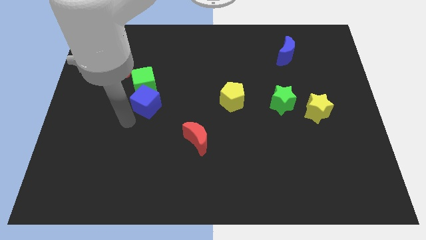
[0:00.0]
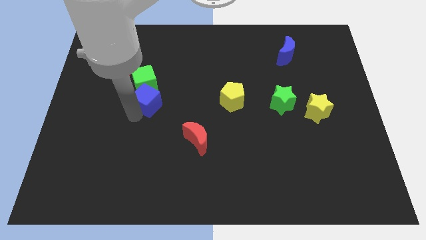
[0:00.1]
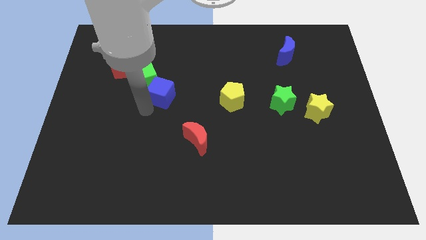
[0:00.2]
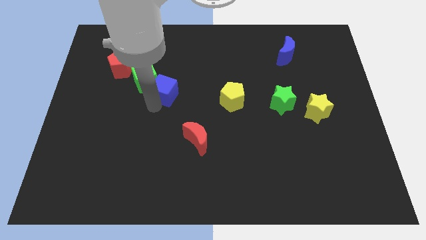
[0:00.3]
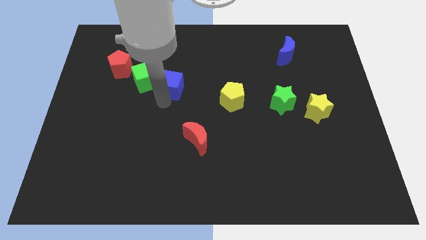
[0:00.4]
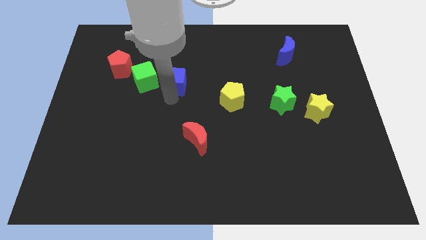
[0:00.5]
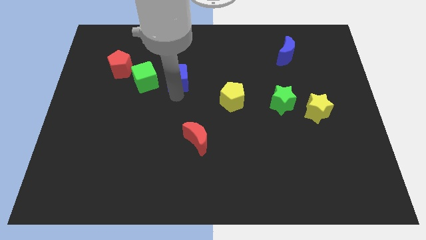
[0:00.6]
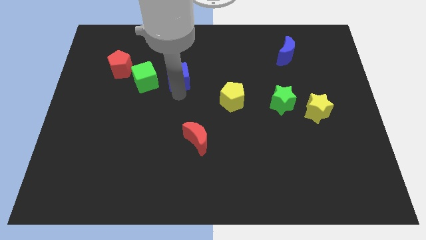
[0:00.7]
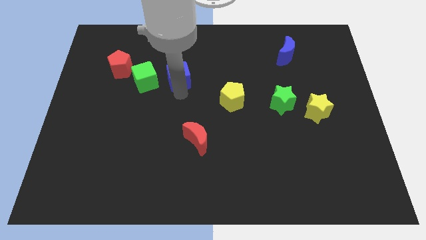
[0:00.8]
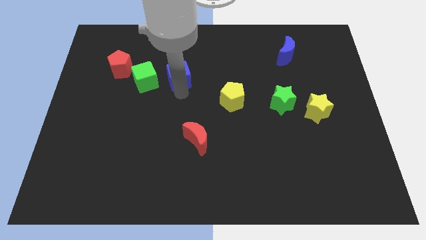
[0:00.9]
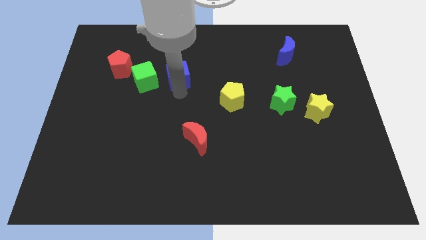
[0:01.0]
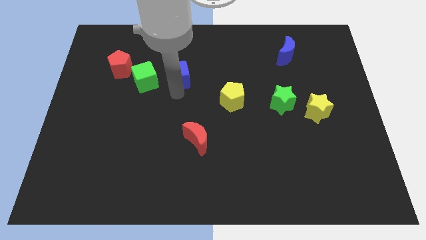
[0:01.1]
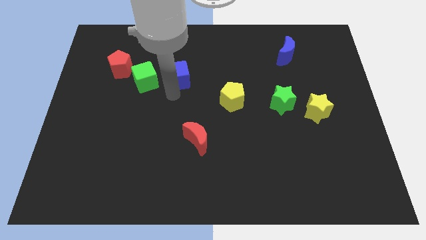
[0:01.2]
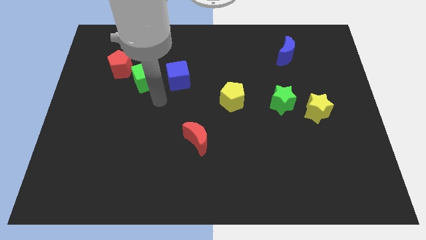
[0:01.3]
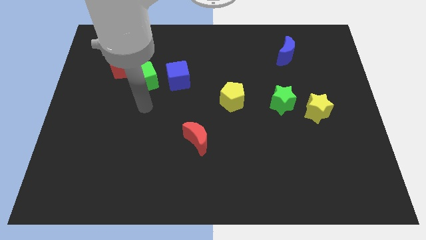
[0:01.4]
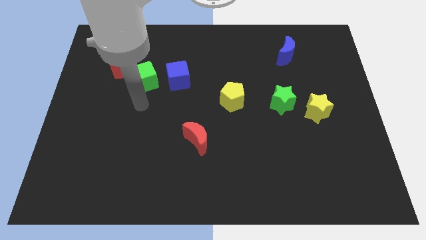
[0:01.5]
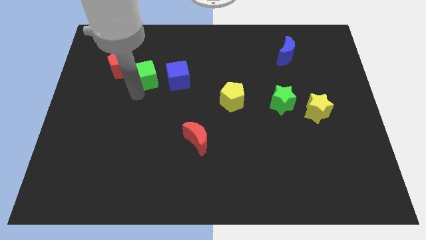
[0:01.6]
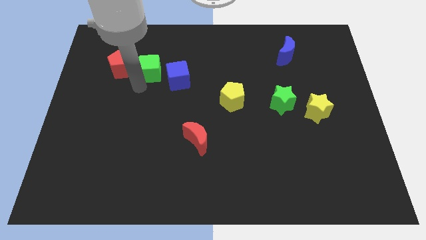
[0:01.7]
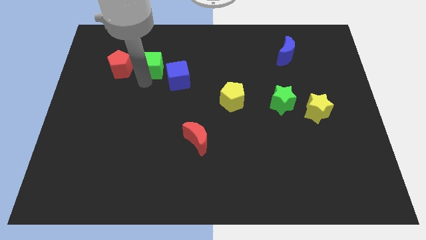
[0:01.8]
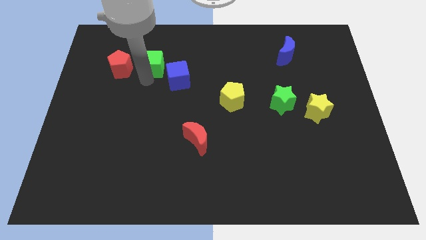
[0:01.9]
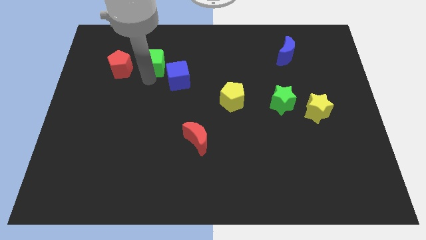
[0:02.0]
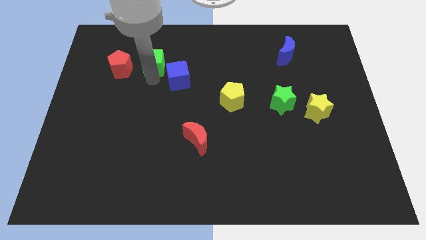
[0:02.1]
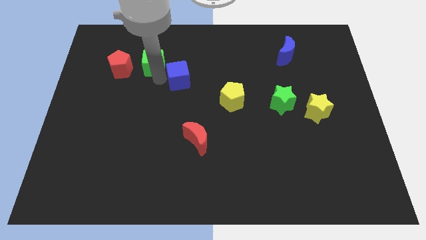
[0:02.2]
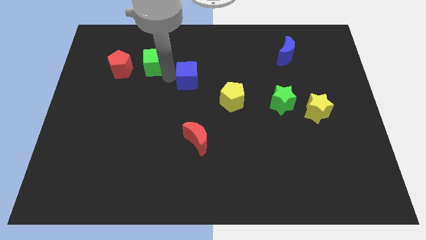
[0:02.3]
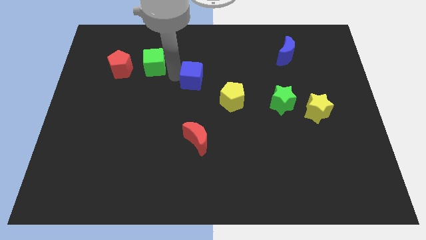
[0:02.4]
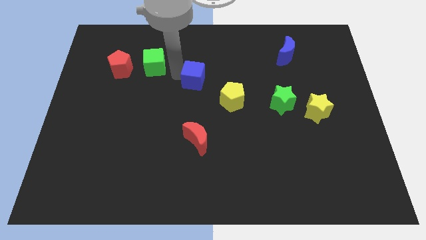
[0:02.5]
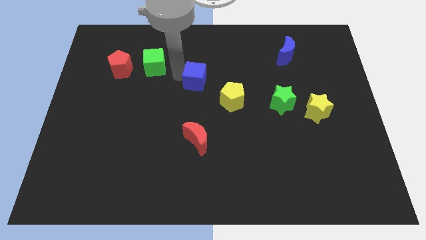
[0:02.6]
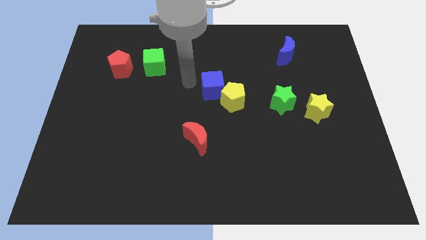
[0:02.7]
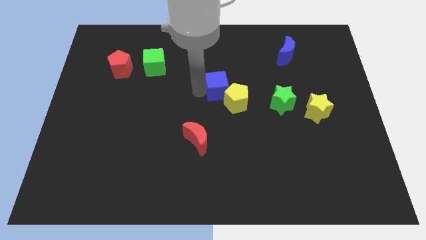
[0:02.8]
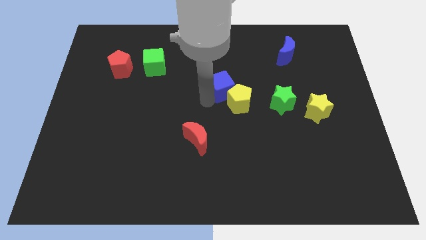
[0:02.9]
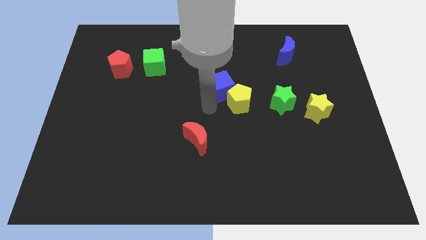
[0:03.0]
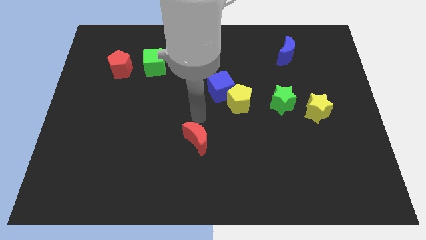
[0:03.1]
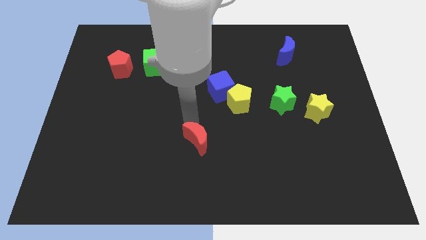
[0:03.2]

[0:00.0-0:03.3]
move the blue cube into the yellow pentagon

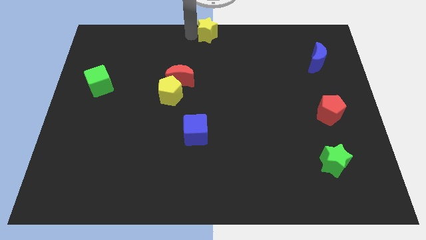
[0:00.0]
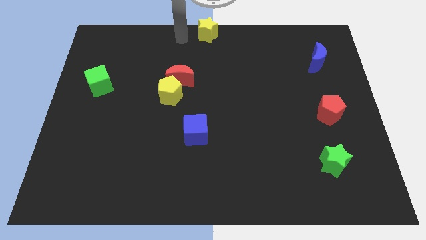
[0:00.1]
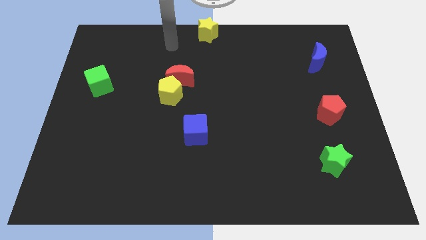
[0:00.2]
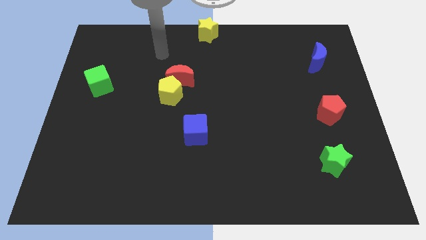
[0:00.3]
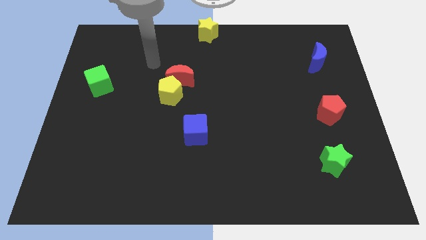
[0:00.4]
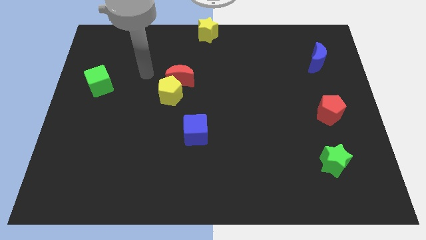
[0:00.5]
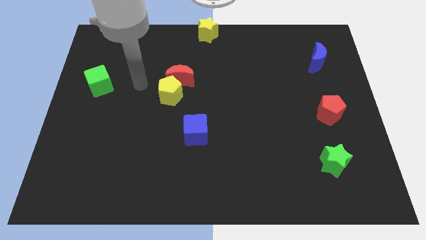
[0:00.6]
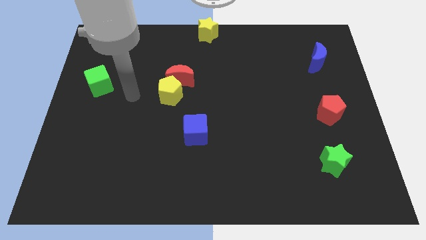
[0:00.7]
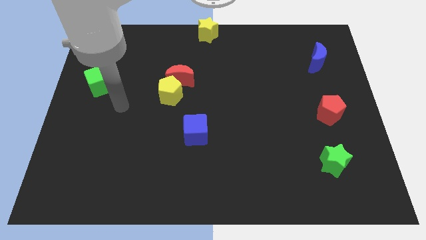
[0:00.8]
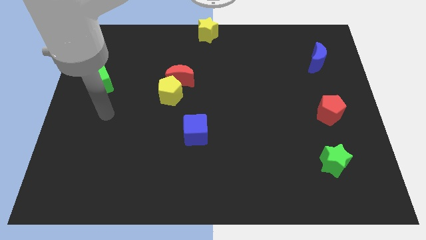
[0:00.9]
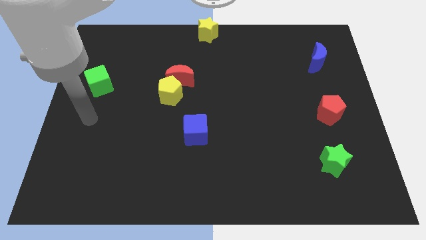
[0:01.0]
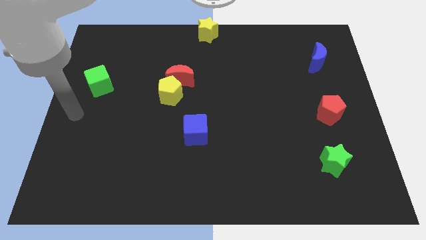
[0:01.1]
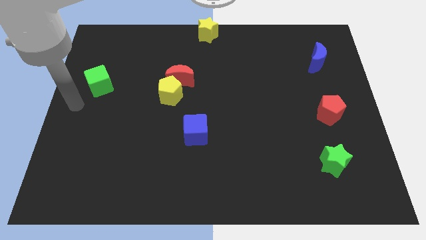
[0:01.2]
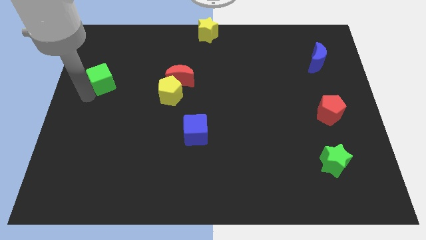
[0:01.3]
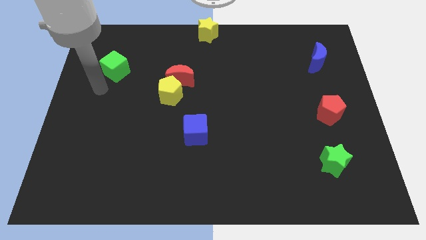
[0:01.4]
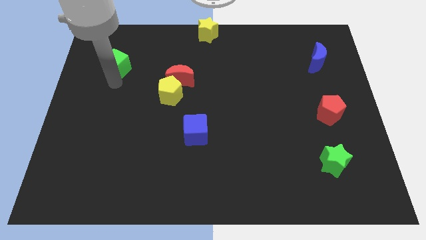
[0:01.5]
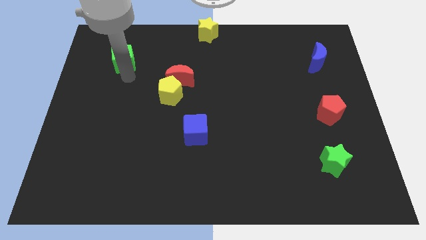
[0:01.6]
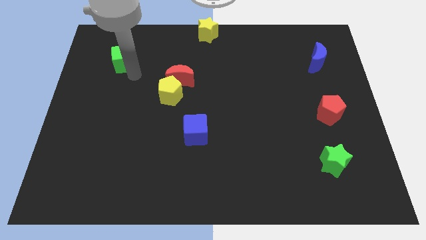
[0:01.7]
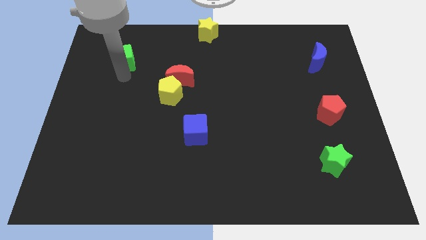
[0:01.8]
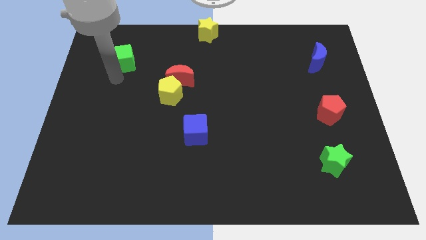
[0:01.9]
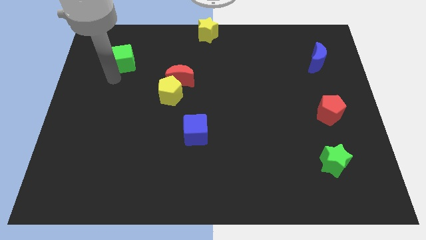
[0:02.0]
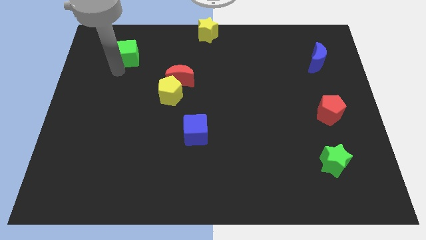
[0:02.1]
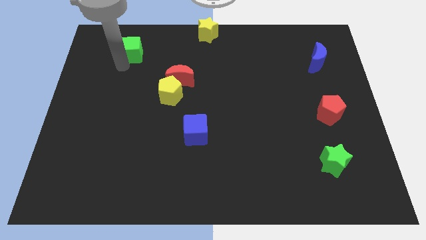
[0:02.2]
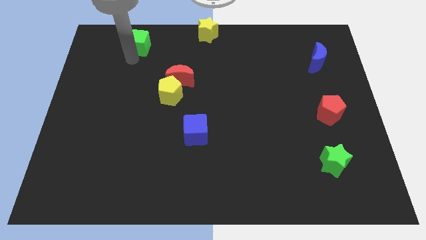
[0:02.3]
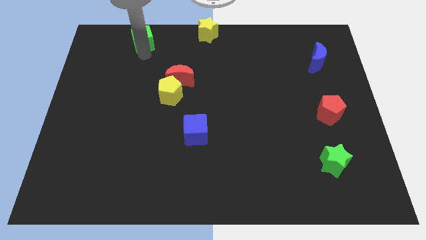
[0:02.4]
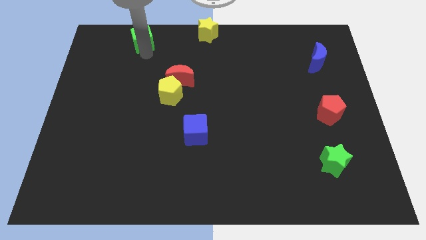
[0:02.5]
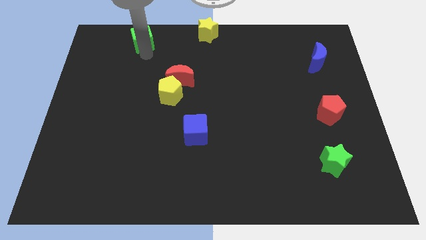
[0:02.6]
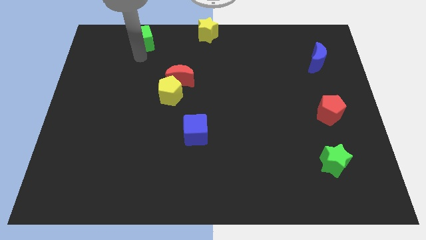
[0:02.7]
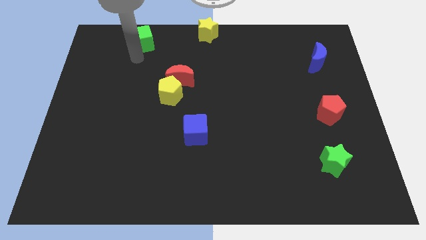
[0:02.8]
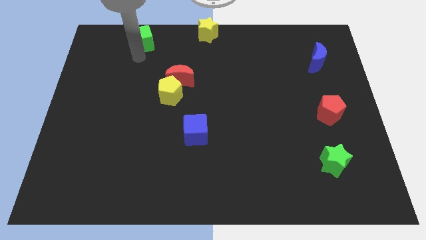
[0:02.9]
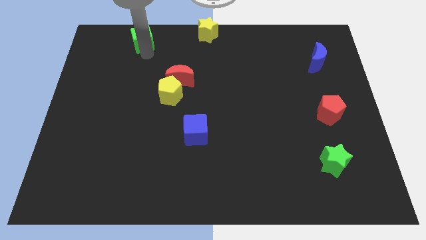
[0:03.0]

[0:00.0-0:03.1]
move the green cube diagonally top left to the red moon

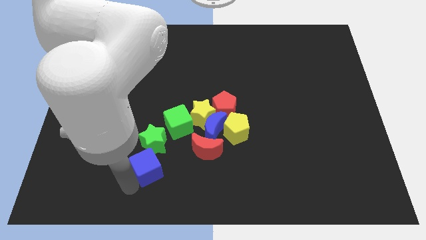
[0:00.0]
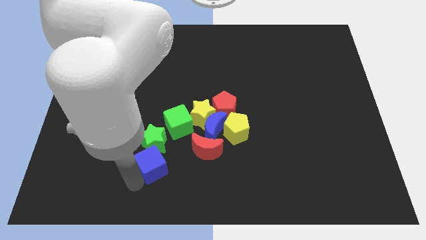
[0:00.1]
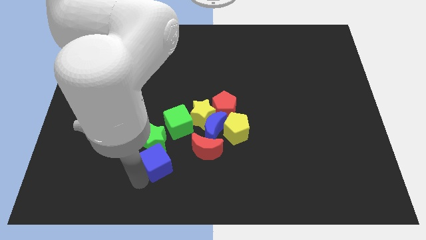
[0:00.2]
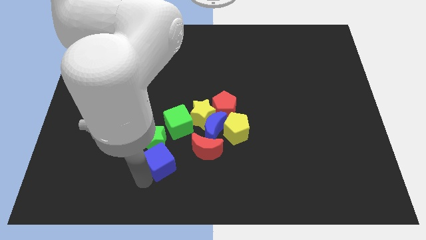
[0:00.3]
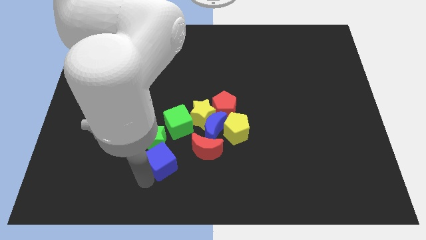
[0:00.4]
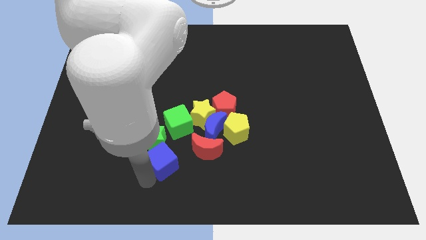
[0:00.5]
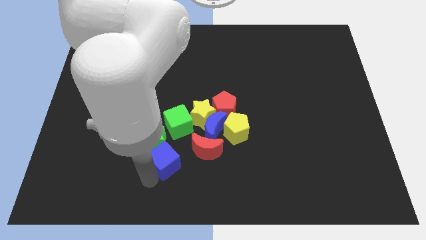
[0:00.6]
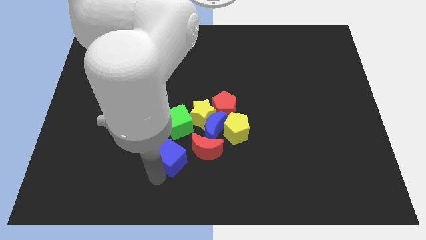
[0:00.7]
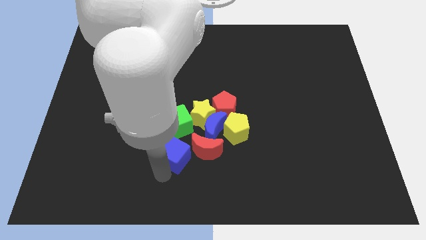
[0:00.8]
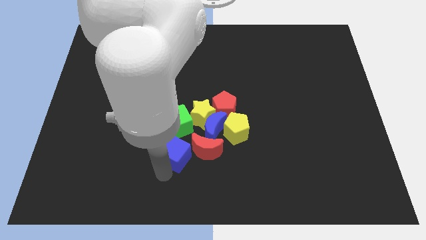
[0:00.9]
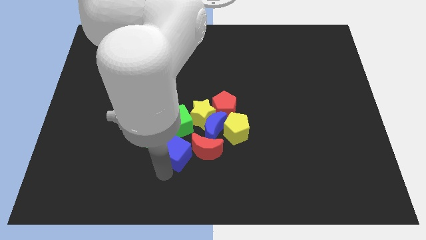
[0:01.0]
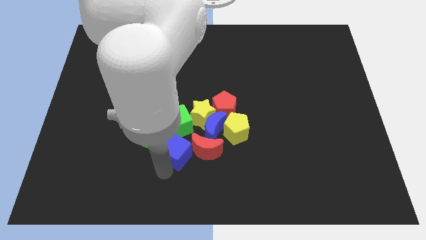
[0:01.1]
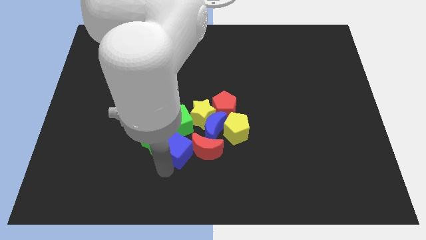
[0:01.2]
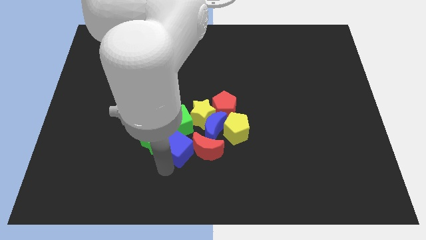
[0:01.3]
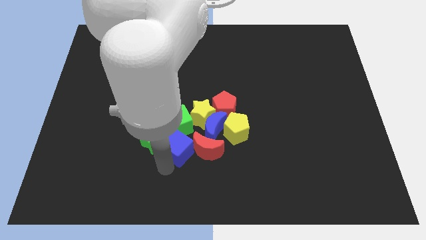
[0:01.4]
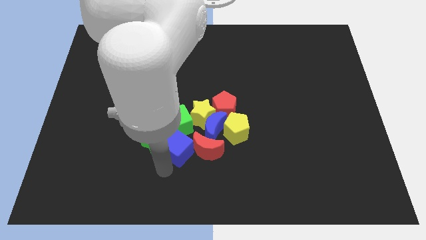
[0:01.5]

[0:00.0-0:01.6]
push the blue cube into green cube

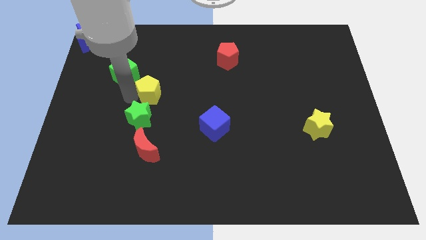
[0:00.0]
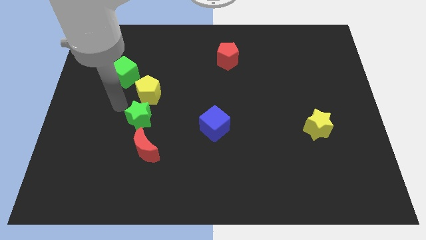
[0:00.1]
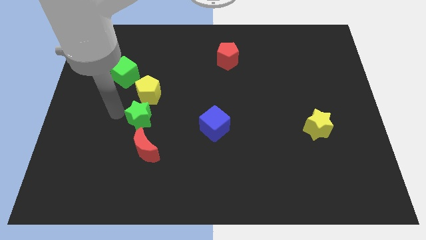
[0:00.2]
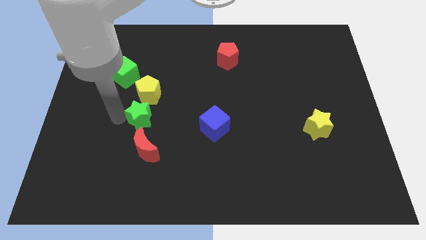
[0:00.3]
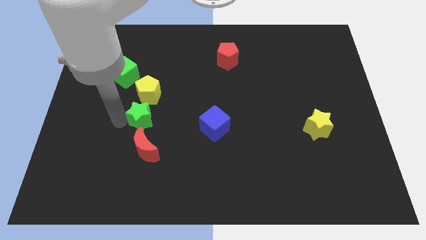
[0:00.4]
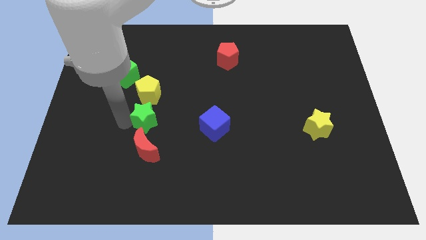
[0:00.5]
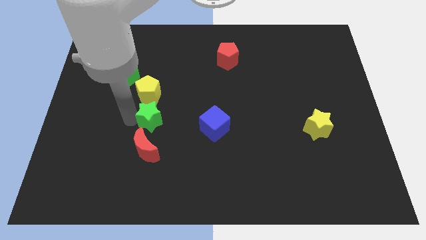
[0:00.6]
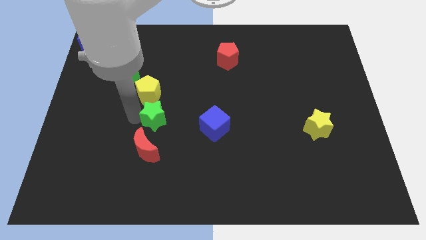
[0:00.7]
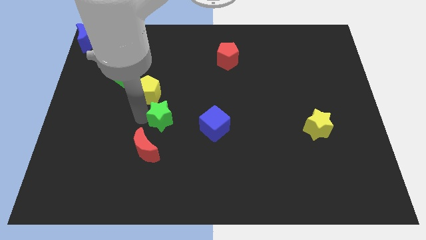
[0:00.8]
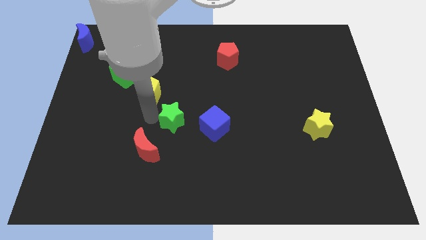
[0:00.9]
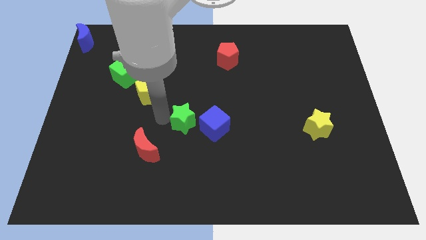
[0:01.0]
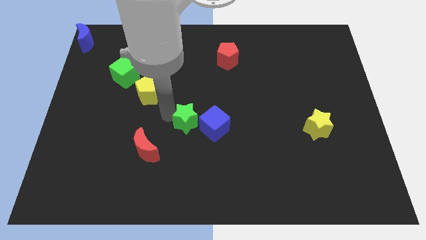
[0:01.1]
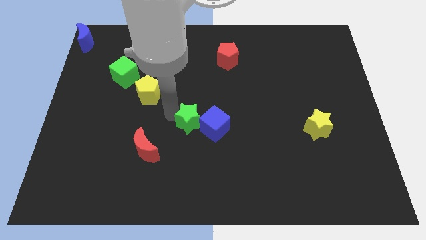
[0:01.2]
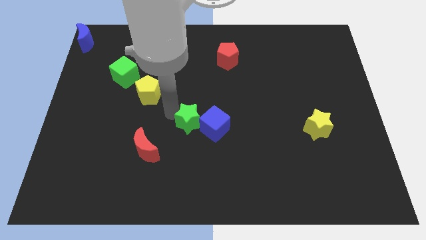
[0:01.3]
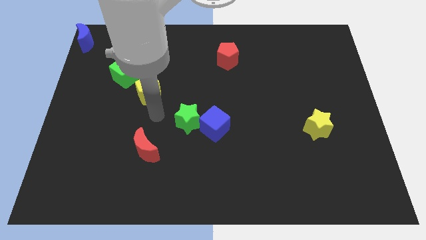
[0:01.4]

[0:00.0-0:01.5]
push the green star close to blue cube
